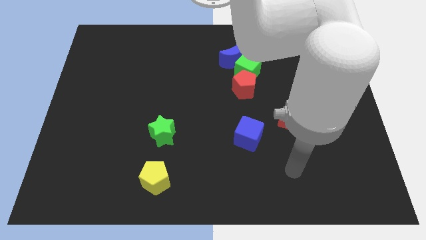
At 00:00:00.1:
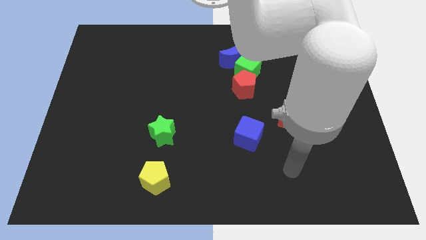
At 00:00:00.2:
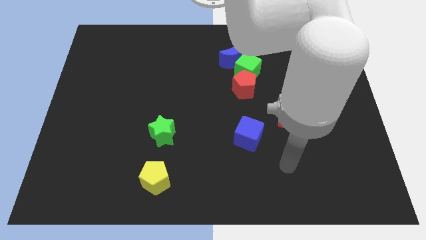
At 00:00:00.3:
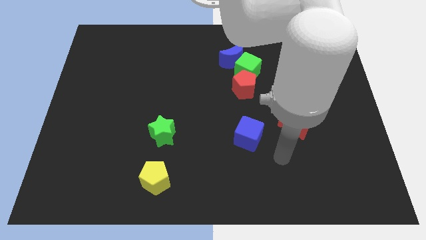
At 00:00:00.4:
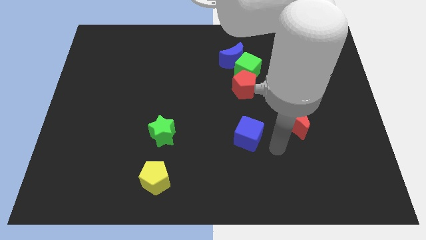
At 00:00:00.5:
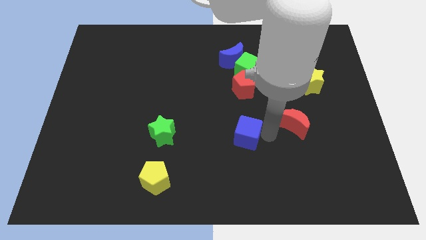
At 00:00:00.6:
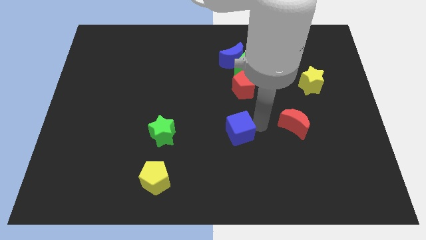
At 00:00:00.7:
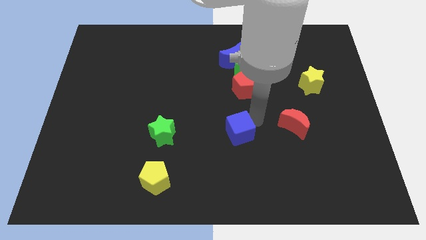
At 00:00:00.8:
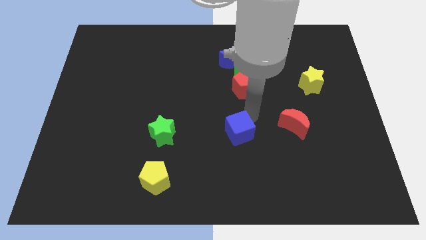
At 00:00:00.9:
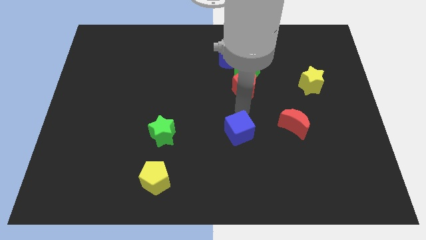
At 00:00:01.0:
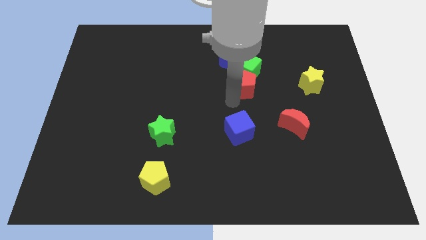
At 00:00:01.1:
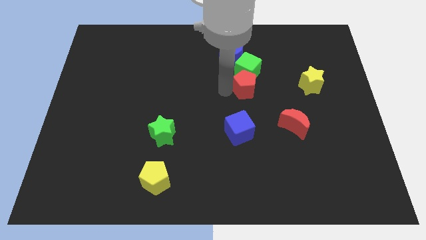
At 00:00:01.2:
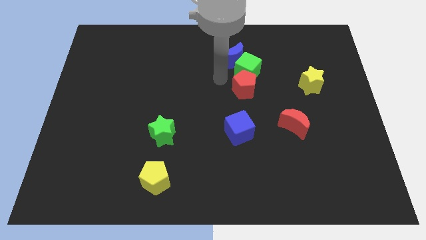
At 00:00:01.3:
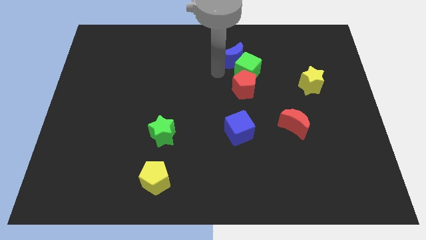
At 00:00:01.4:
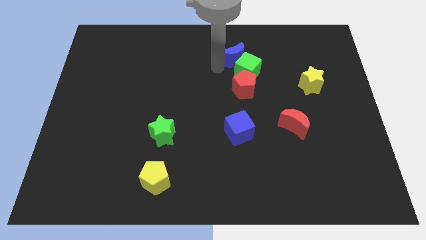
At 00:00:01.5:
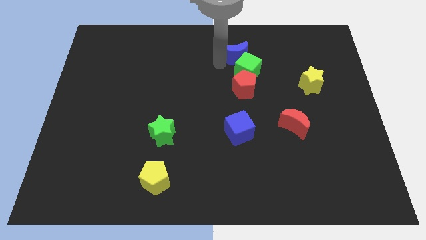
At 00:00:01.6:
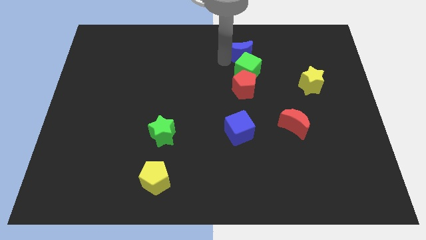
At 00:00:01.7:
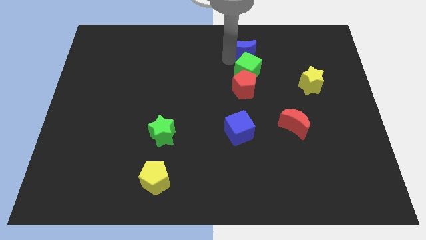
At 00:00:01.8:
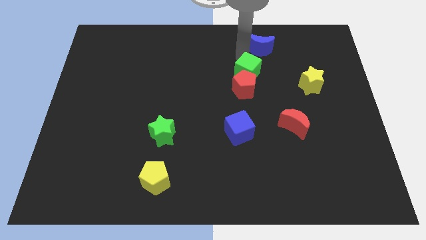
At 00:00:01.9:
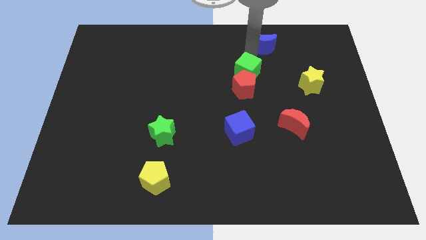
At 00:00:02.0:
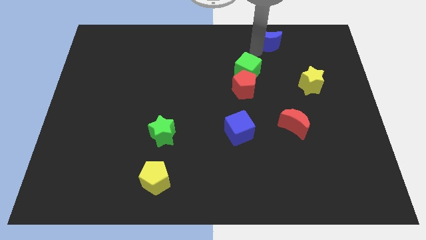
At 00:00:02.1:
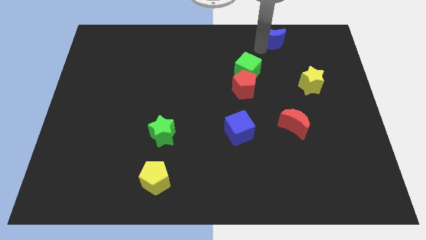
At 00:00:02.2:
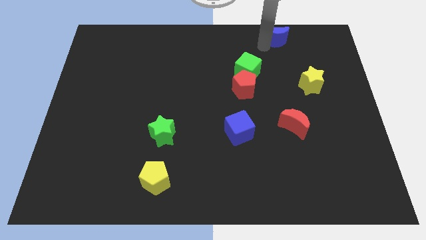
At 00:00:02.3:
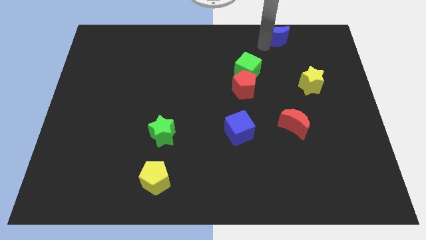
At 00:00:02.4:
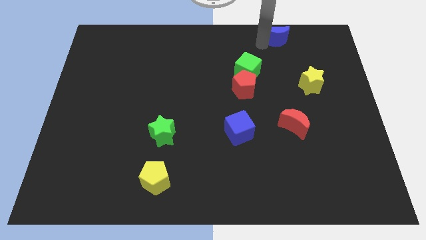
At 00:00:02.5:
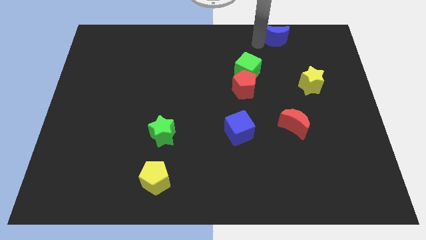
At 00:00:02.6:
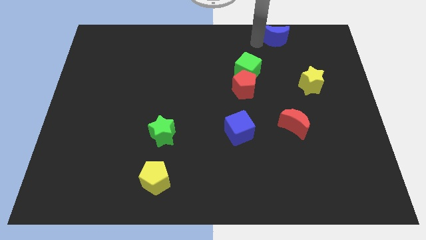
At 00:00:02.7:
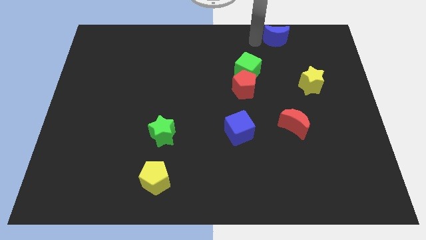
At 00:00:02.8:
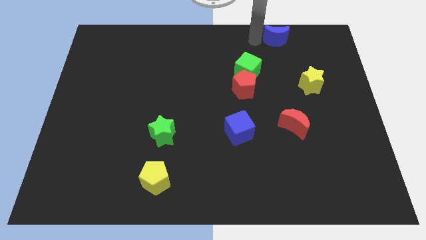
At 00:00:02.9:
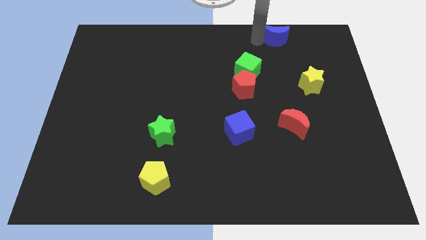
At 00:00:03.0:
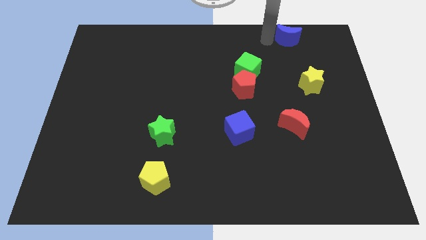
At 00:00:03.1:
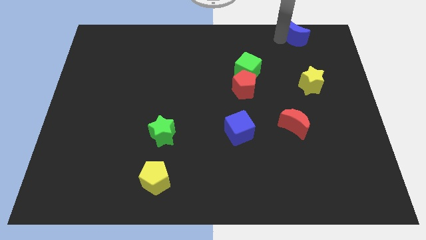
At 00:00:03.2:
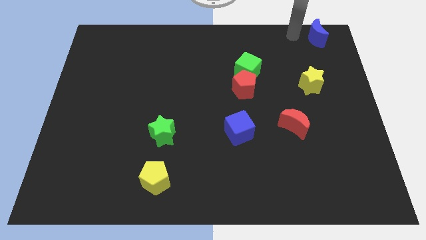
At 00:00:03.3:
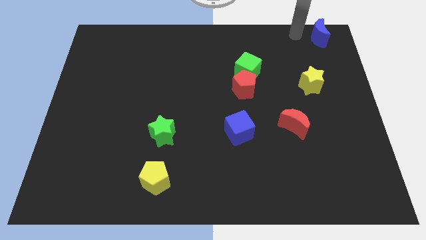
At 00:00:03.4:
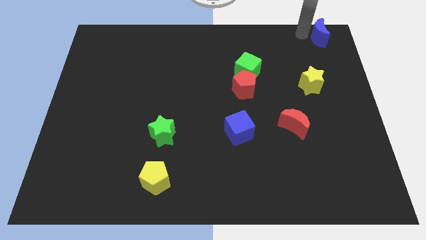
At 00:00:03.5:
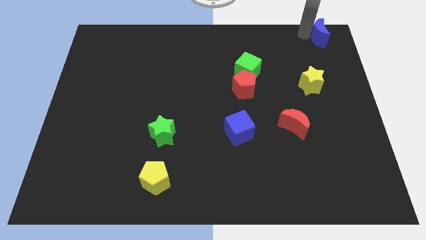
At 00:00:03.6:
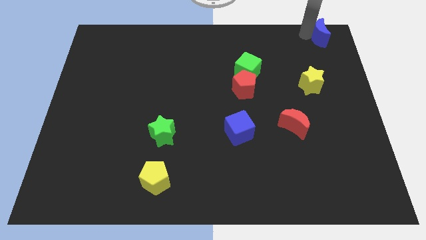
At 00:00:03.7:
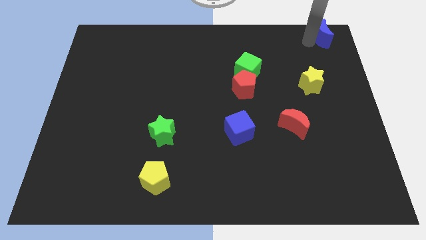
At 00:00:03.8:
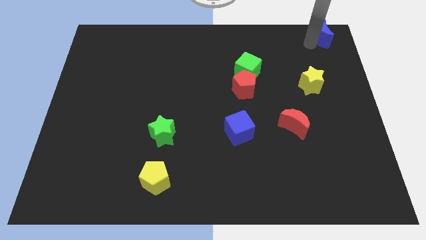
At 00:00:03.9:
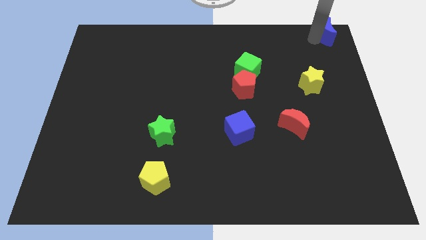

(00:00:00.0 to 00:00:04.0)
move the blue cube towards the centre of the board

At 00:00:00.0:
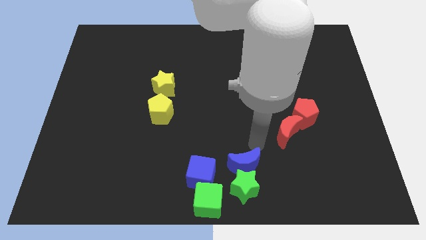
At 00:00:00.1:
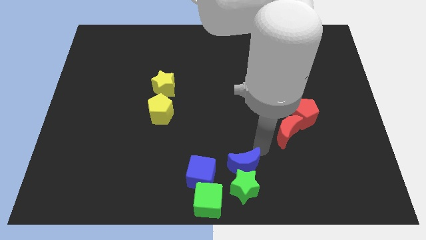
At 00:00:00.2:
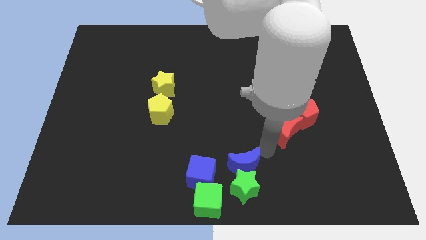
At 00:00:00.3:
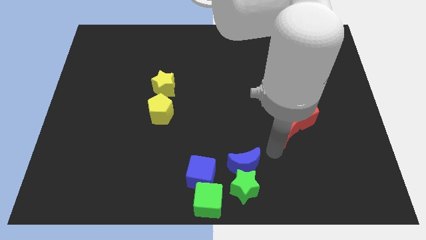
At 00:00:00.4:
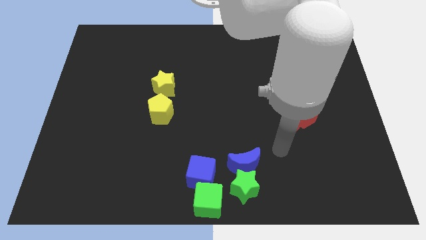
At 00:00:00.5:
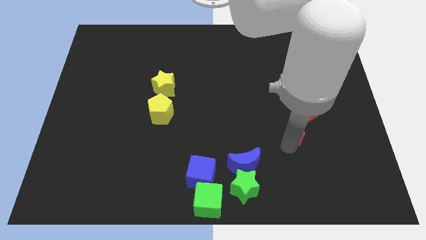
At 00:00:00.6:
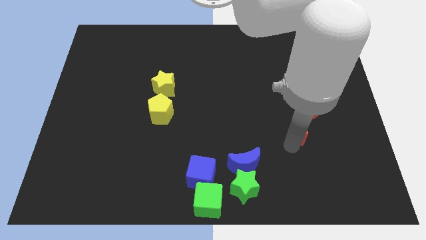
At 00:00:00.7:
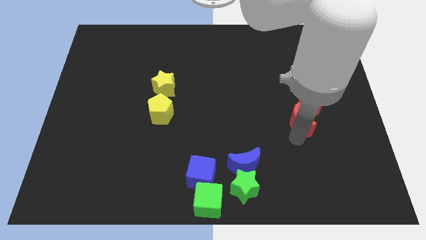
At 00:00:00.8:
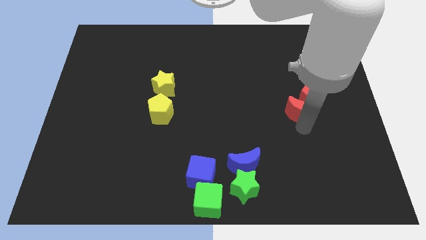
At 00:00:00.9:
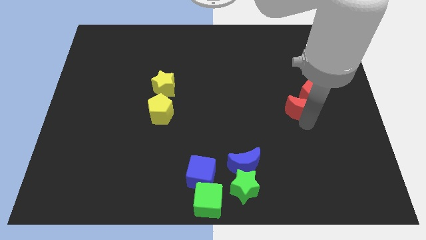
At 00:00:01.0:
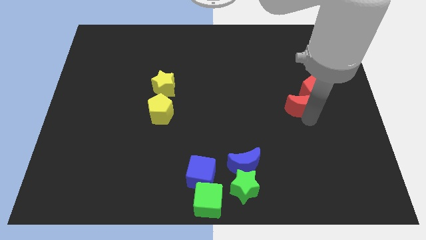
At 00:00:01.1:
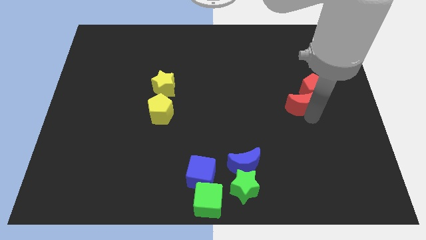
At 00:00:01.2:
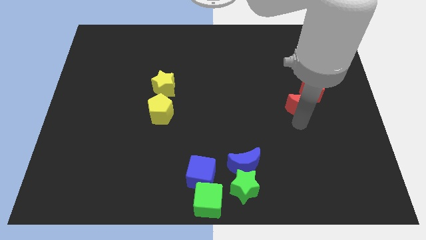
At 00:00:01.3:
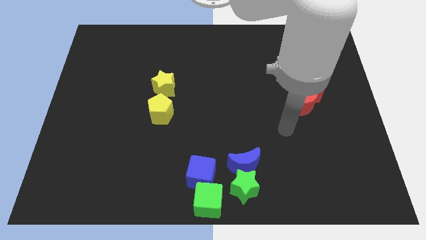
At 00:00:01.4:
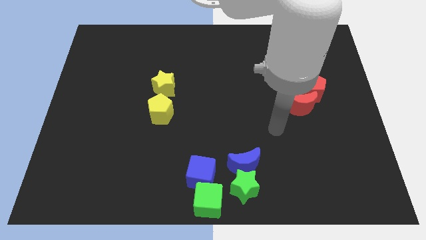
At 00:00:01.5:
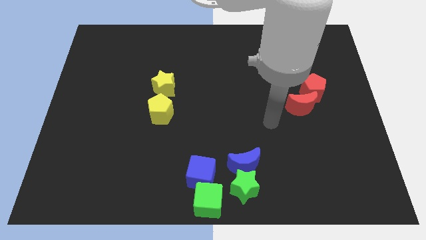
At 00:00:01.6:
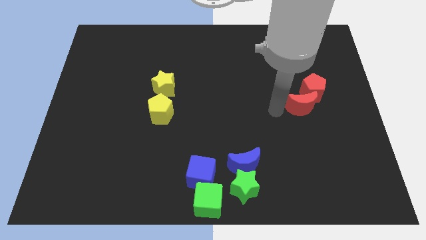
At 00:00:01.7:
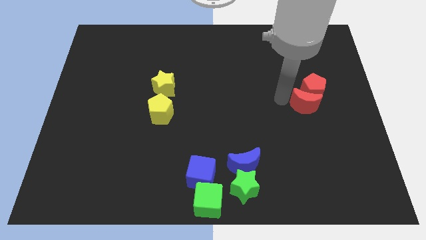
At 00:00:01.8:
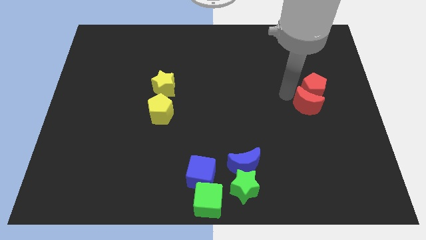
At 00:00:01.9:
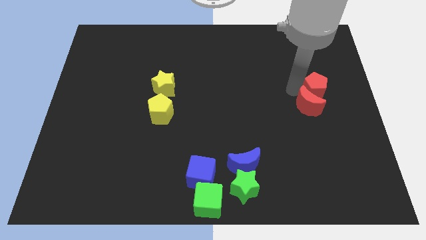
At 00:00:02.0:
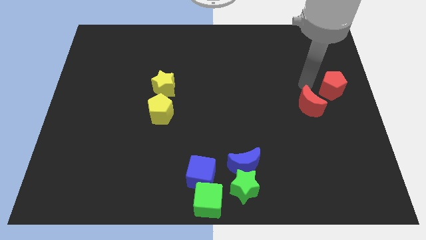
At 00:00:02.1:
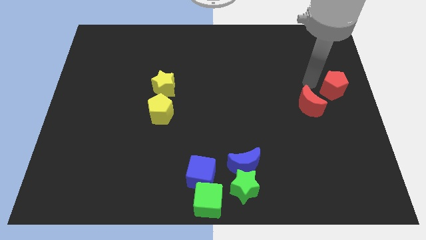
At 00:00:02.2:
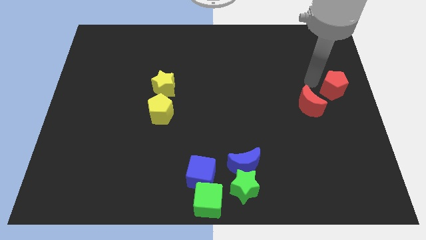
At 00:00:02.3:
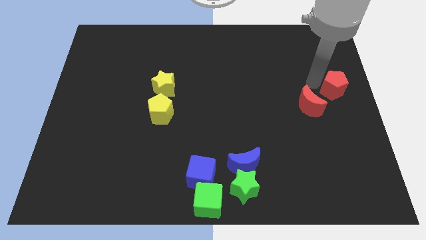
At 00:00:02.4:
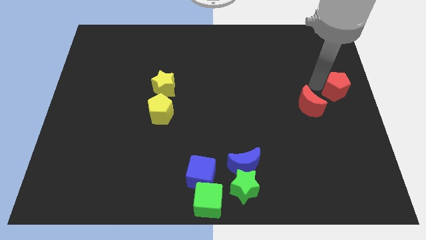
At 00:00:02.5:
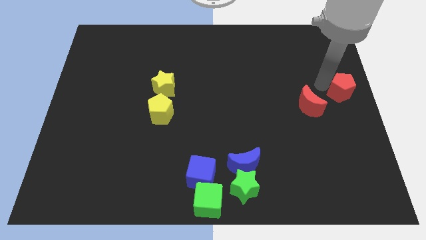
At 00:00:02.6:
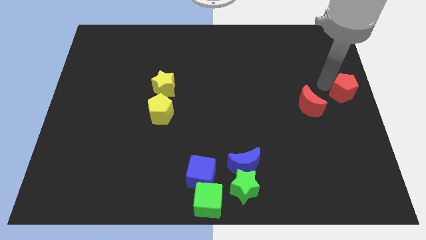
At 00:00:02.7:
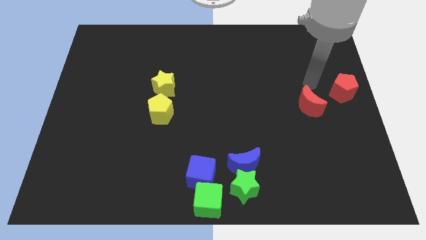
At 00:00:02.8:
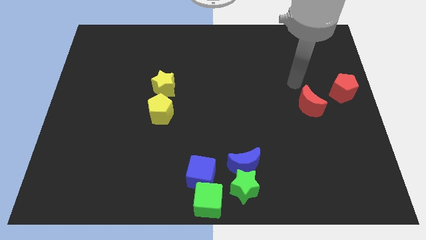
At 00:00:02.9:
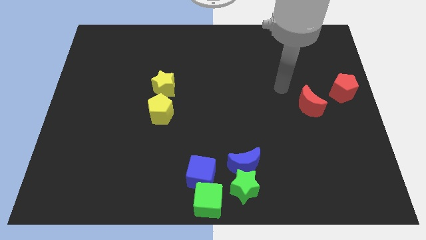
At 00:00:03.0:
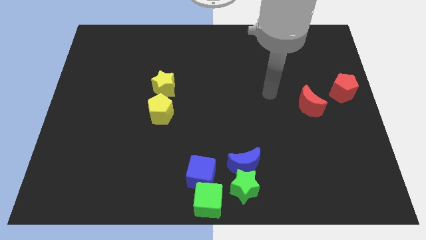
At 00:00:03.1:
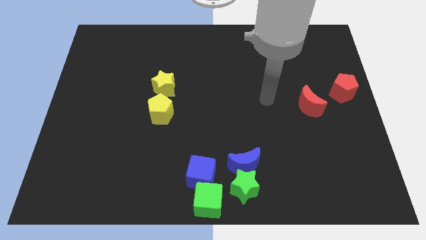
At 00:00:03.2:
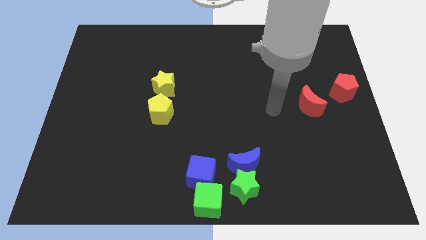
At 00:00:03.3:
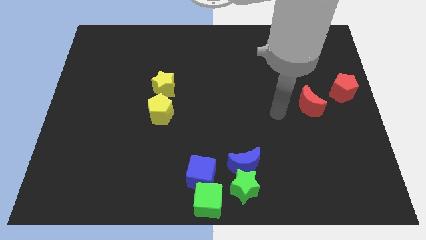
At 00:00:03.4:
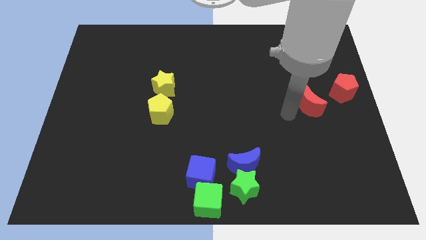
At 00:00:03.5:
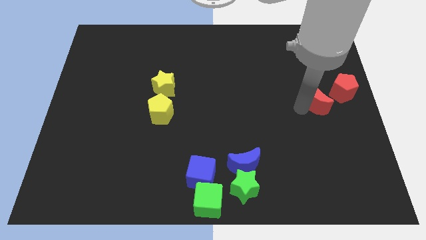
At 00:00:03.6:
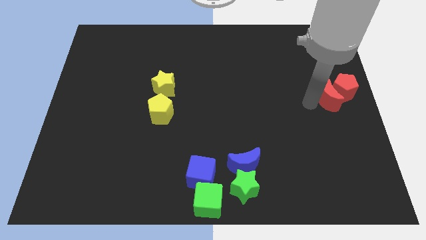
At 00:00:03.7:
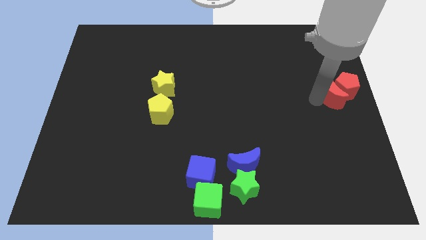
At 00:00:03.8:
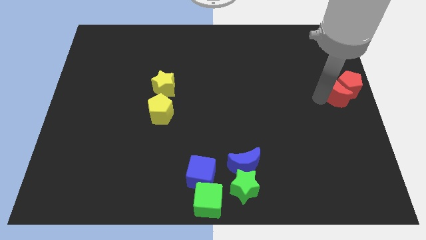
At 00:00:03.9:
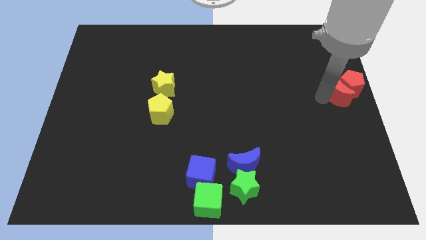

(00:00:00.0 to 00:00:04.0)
move the red crescent and the red pentagon towards the right side of the board

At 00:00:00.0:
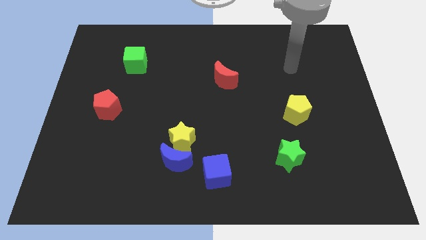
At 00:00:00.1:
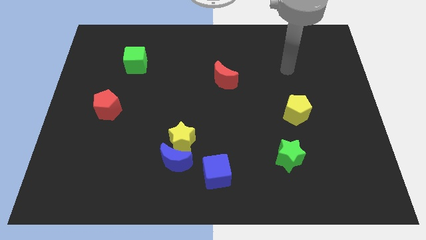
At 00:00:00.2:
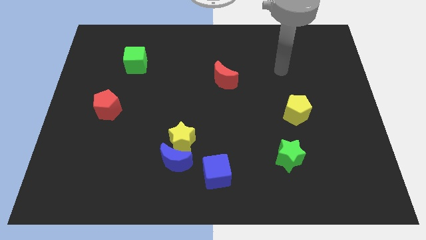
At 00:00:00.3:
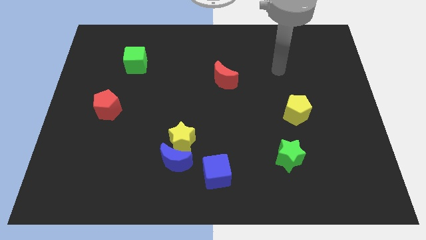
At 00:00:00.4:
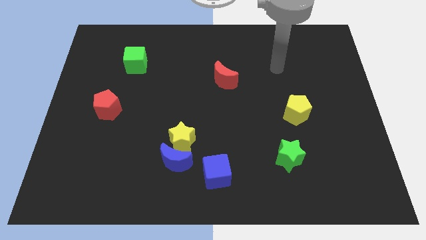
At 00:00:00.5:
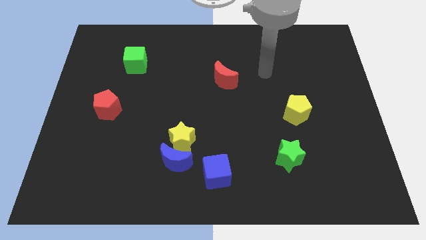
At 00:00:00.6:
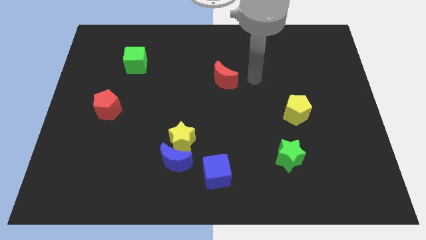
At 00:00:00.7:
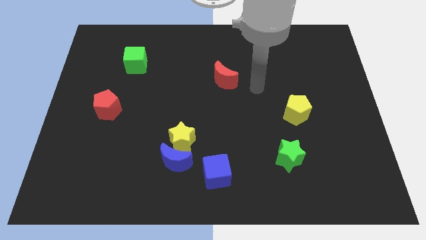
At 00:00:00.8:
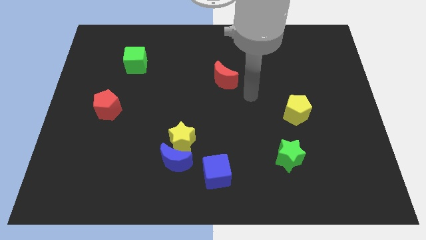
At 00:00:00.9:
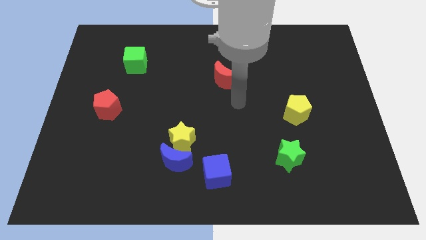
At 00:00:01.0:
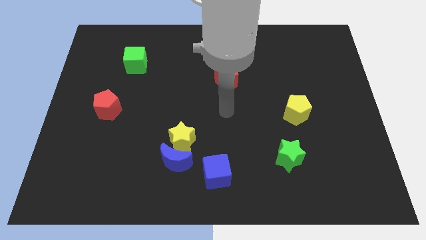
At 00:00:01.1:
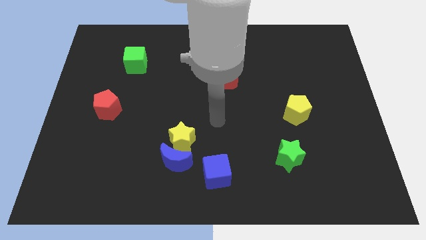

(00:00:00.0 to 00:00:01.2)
place your arm towards the center of the board
